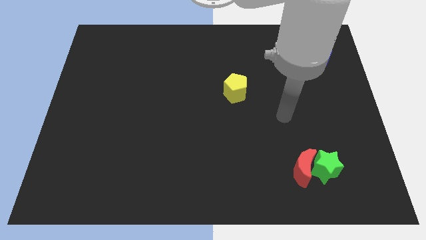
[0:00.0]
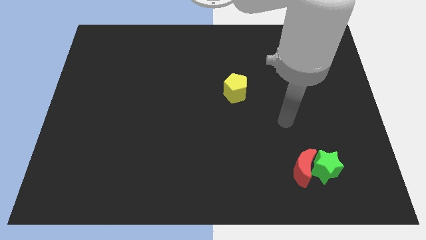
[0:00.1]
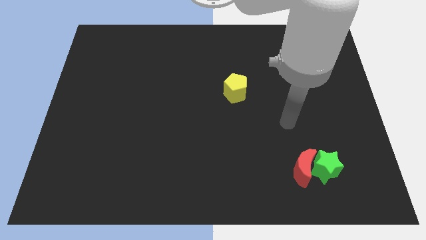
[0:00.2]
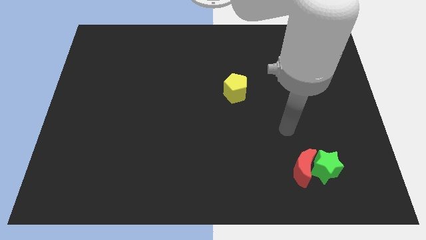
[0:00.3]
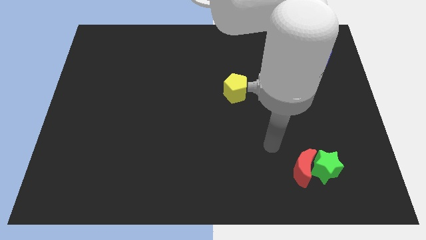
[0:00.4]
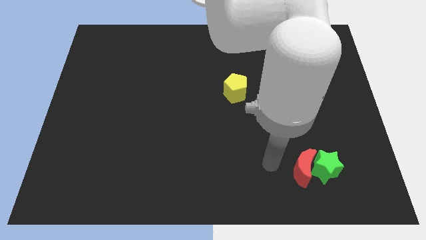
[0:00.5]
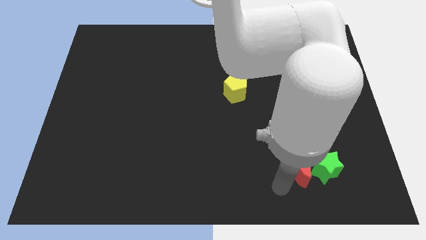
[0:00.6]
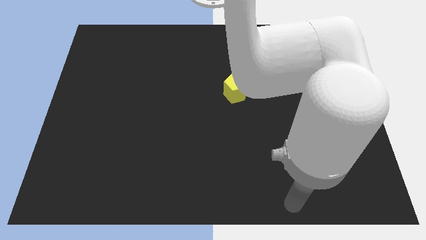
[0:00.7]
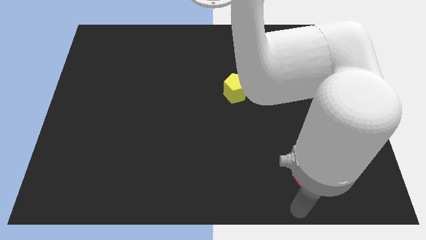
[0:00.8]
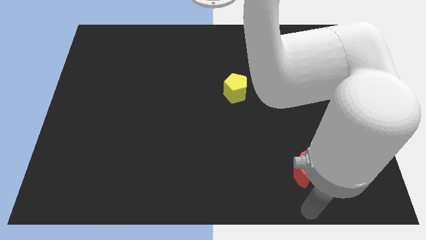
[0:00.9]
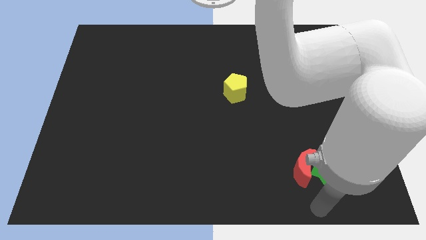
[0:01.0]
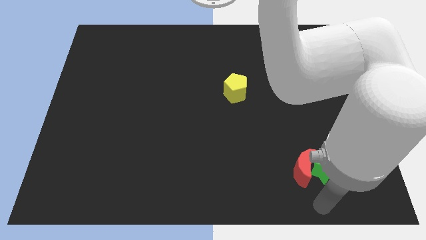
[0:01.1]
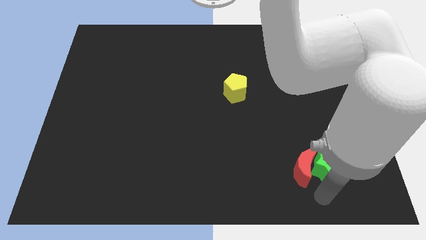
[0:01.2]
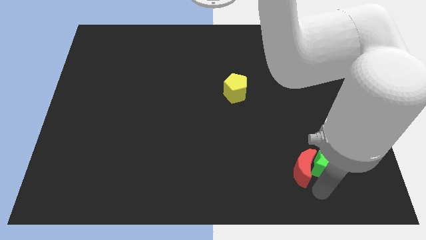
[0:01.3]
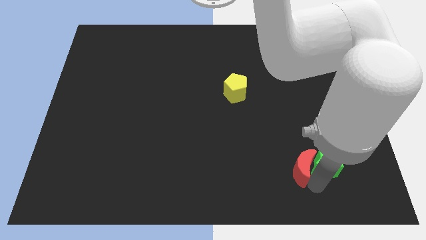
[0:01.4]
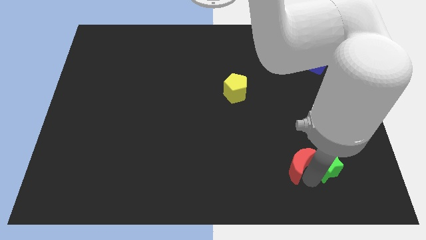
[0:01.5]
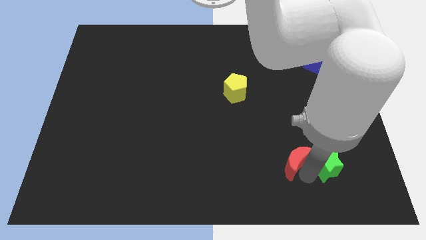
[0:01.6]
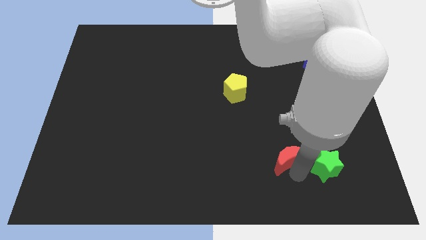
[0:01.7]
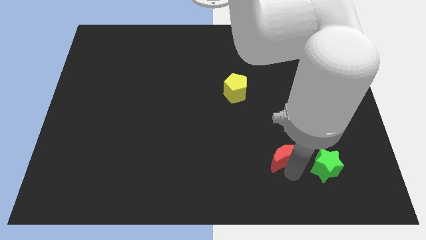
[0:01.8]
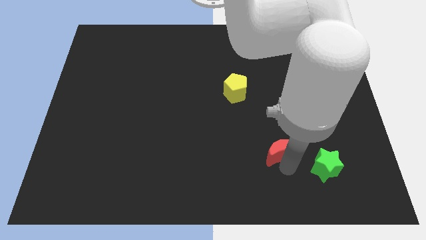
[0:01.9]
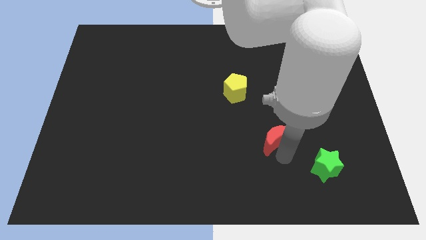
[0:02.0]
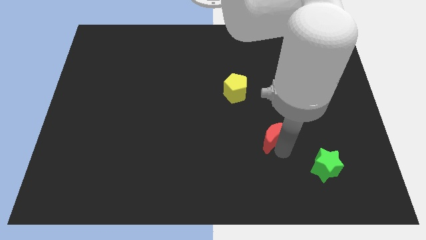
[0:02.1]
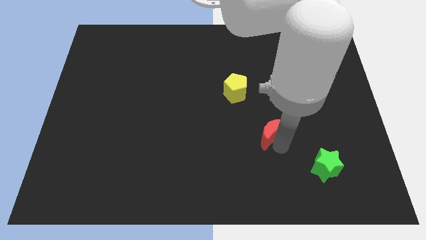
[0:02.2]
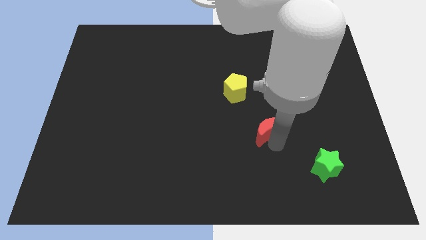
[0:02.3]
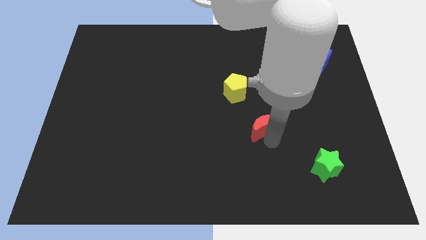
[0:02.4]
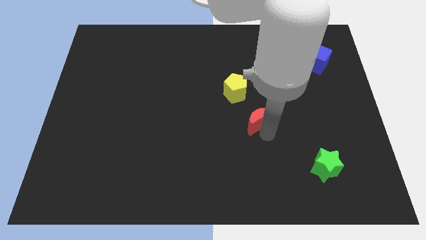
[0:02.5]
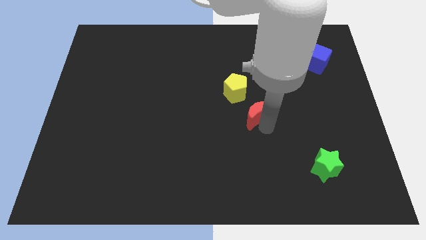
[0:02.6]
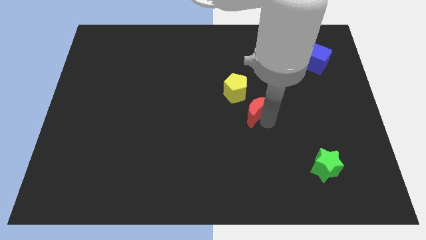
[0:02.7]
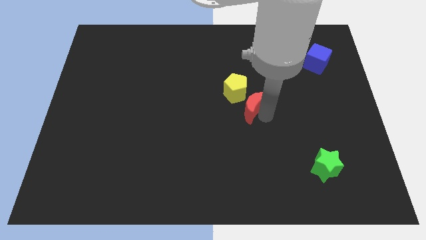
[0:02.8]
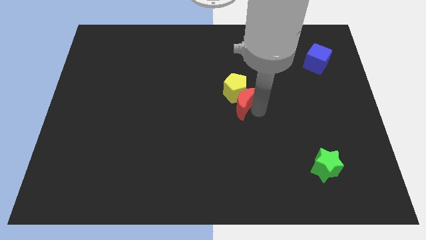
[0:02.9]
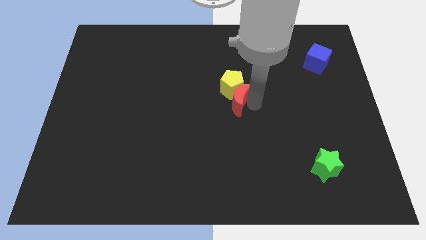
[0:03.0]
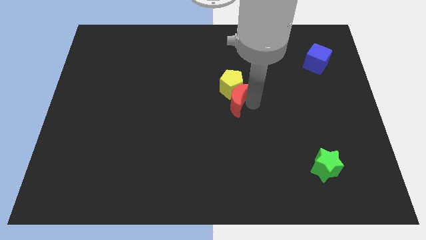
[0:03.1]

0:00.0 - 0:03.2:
slide the red moon close to the pentagon

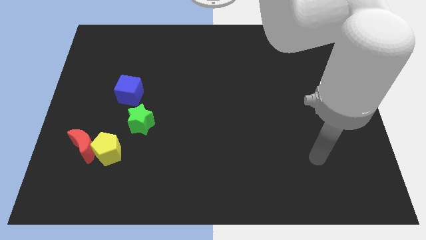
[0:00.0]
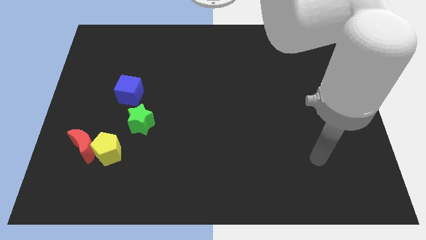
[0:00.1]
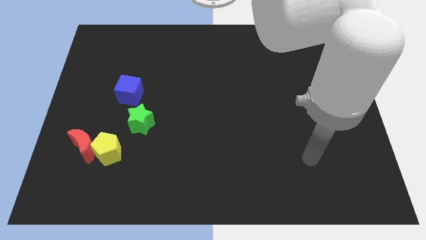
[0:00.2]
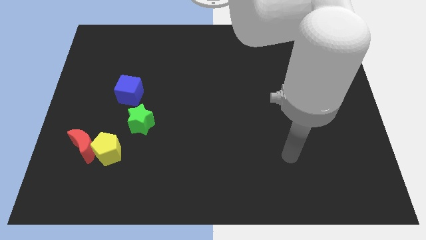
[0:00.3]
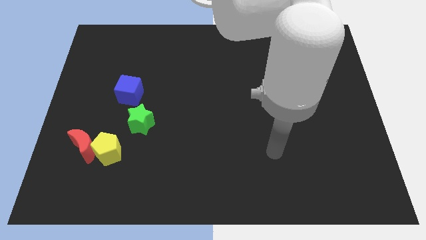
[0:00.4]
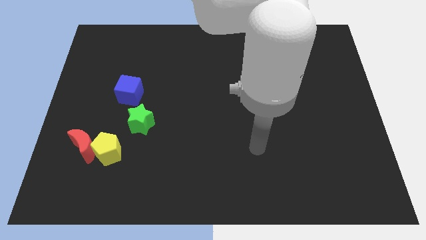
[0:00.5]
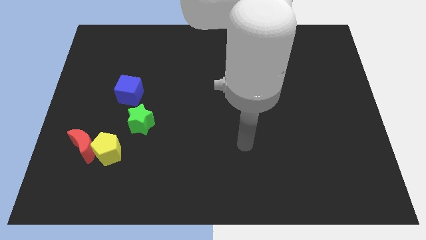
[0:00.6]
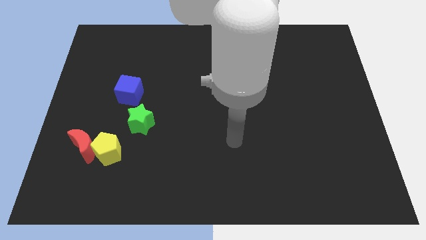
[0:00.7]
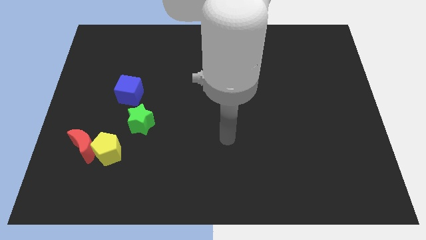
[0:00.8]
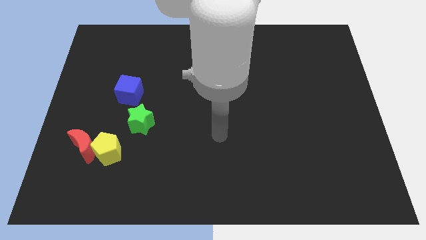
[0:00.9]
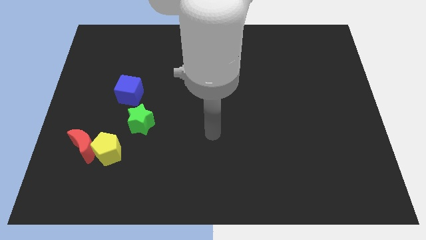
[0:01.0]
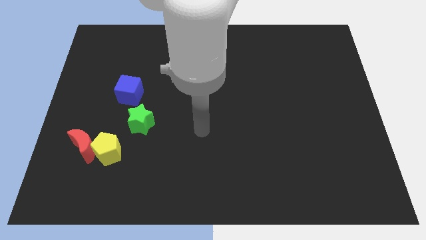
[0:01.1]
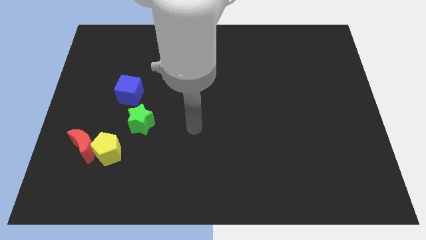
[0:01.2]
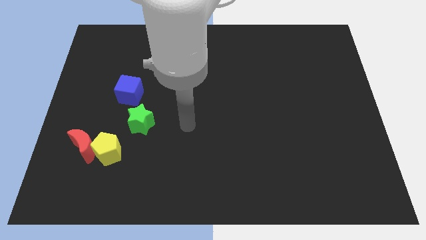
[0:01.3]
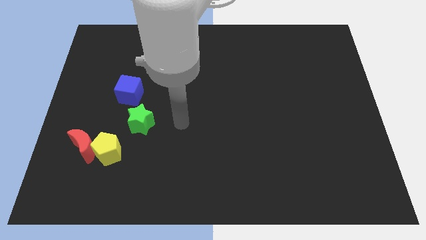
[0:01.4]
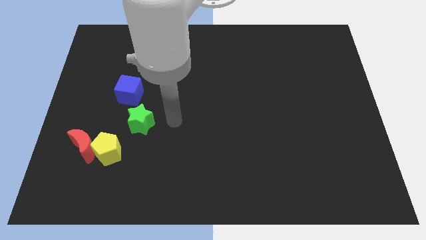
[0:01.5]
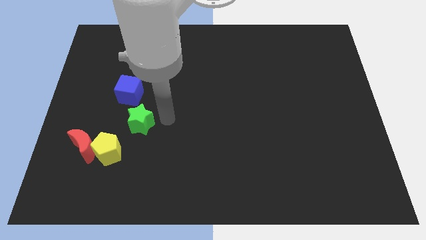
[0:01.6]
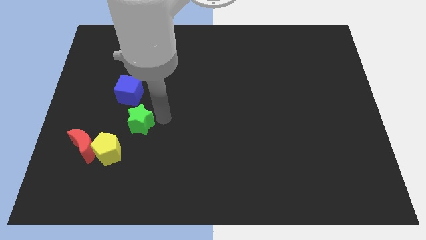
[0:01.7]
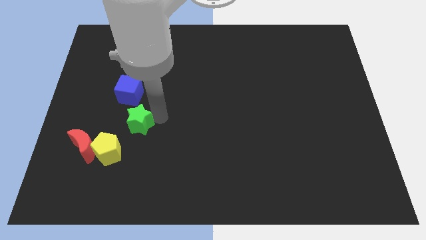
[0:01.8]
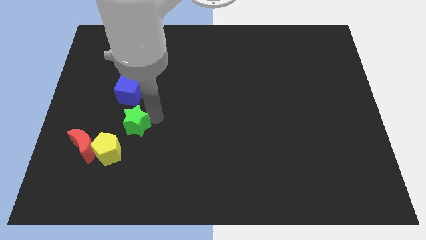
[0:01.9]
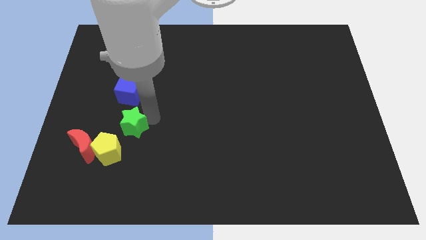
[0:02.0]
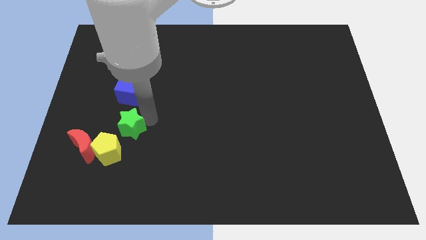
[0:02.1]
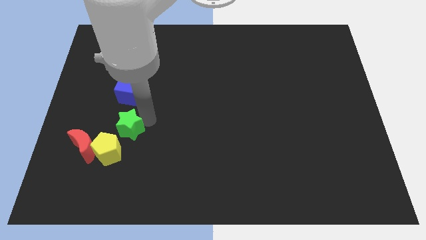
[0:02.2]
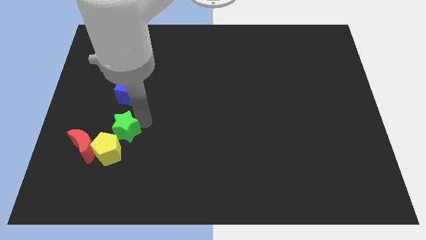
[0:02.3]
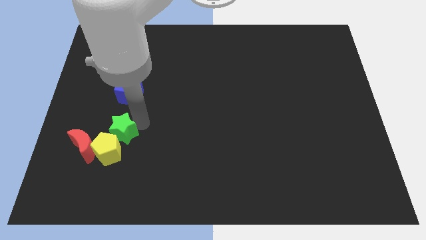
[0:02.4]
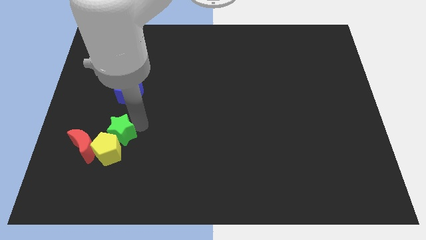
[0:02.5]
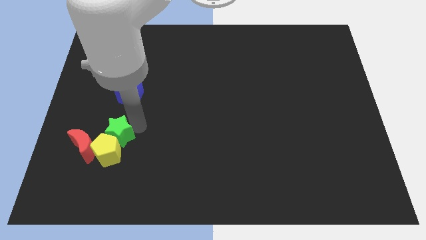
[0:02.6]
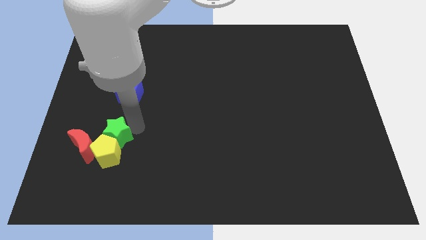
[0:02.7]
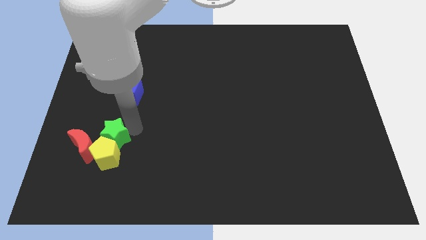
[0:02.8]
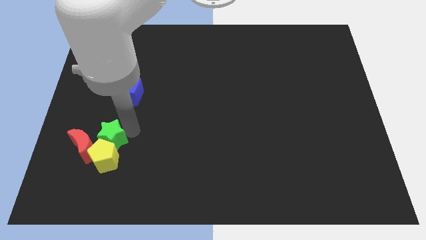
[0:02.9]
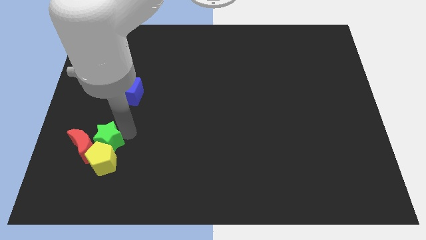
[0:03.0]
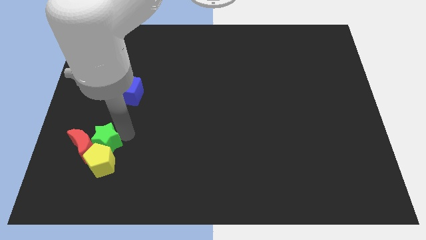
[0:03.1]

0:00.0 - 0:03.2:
push the green star close to the red block

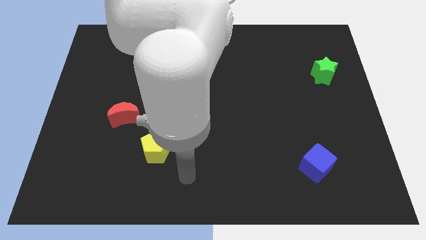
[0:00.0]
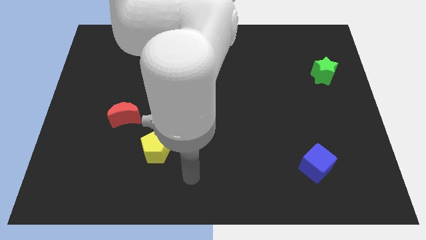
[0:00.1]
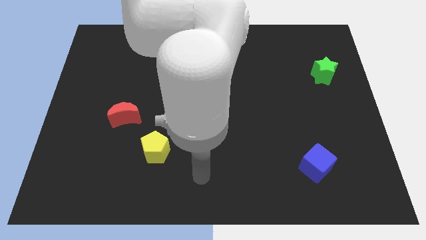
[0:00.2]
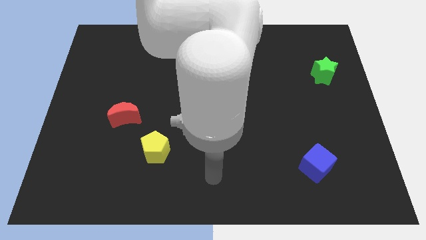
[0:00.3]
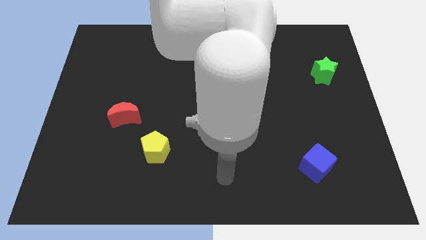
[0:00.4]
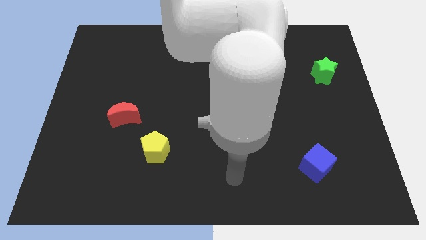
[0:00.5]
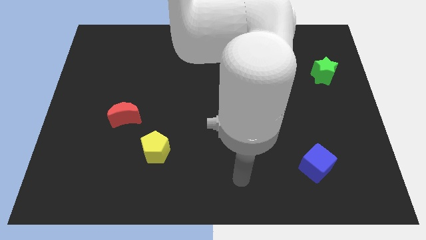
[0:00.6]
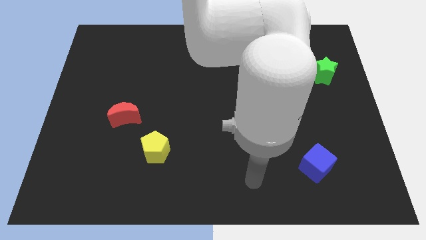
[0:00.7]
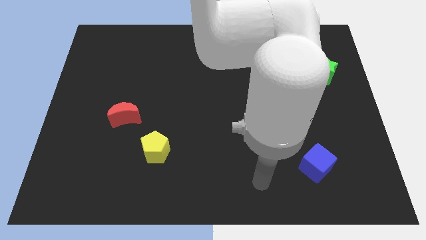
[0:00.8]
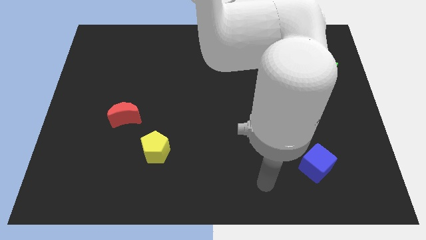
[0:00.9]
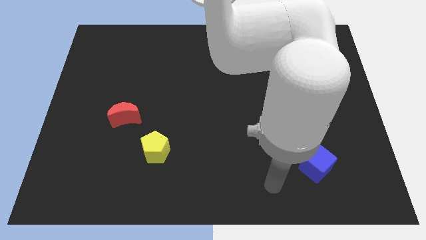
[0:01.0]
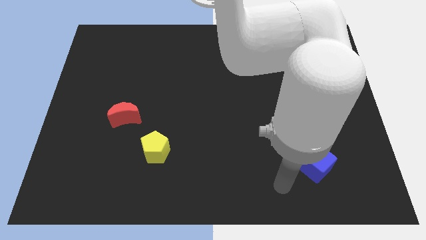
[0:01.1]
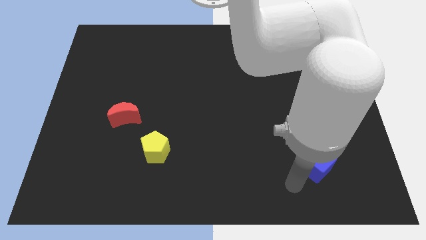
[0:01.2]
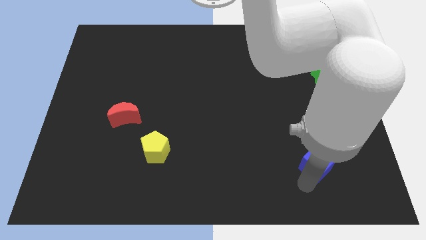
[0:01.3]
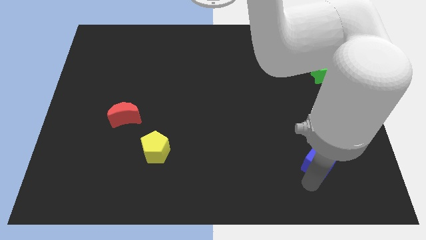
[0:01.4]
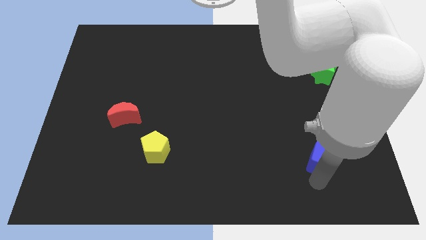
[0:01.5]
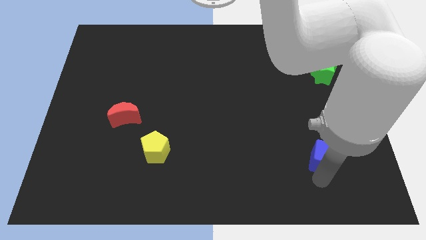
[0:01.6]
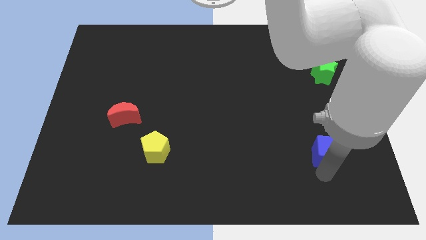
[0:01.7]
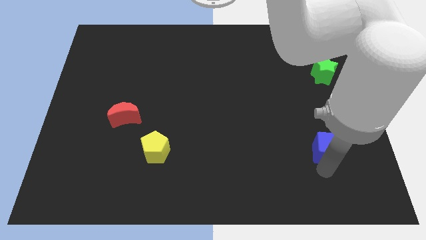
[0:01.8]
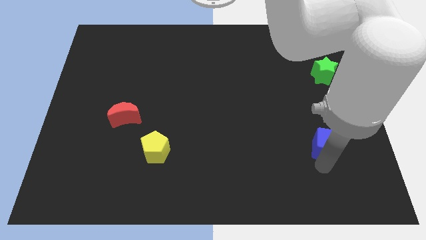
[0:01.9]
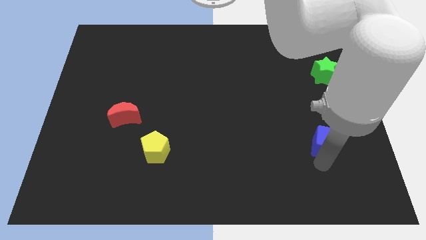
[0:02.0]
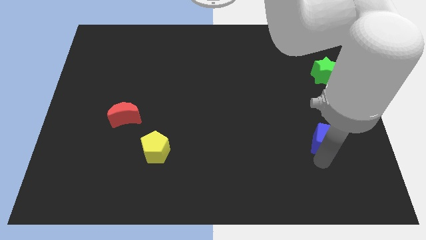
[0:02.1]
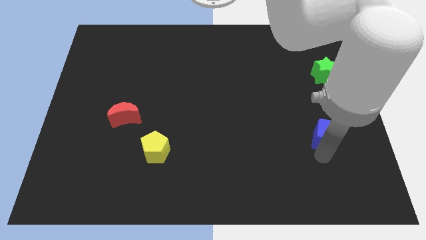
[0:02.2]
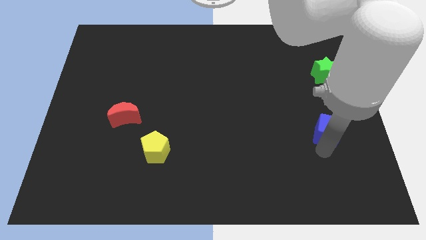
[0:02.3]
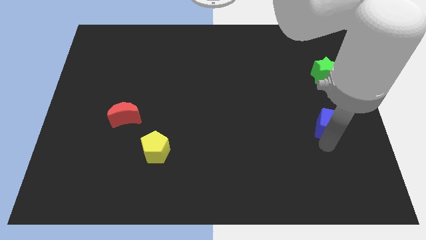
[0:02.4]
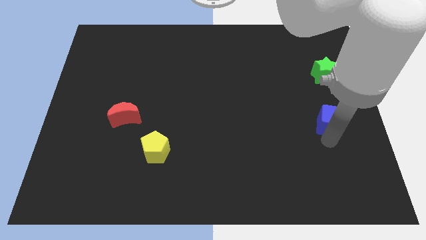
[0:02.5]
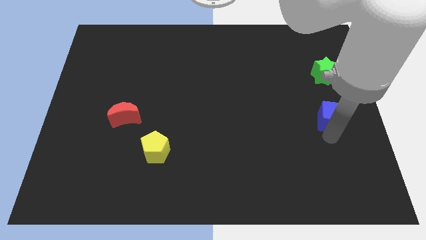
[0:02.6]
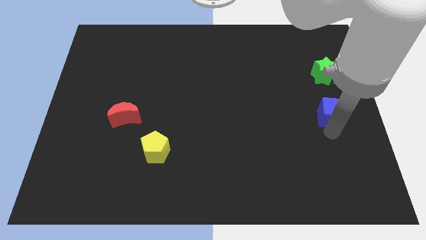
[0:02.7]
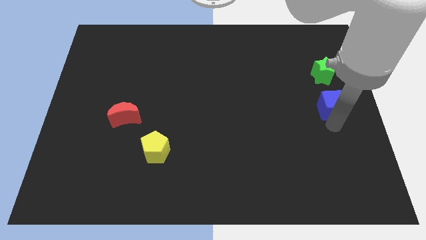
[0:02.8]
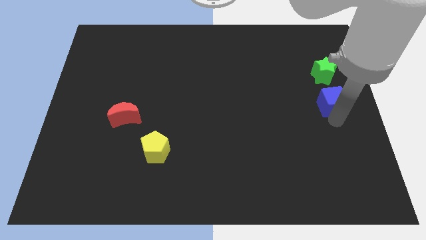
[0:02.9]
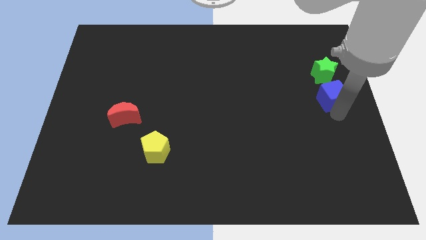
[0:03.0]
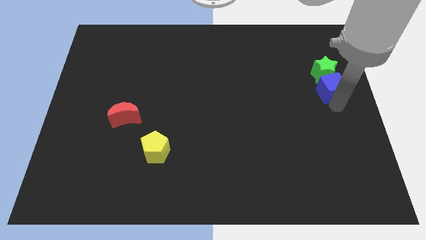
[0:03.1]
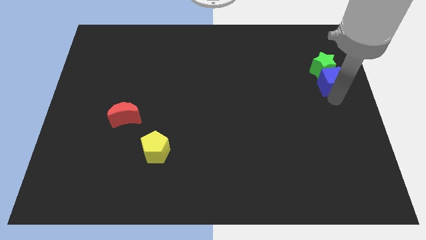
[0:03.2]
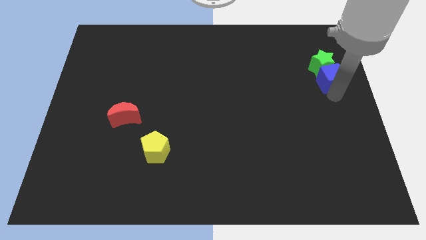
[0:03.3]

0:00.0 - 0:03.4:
push the cube next to the star
